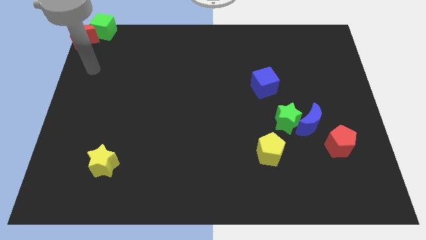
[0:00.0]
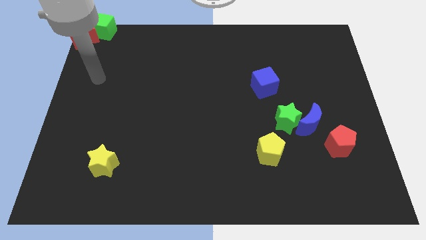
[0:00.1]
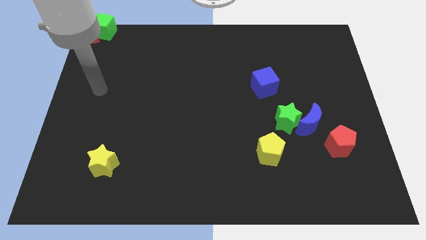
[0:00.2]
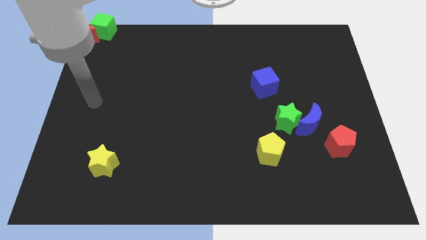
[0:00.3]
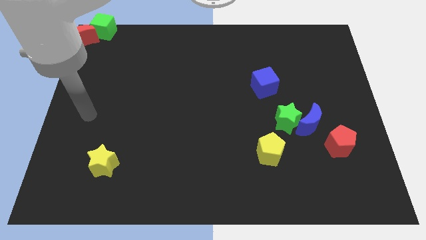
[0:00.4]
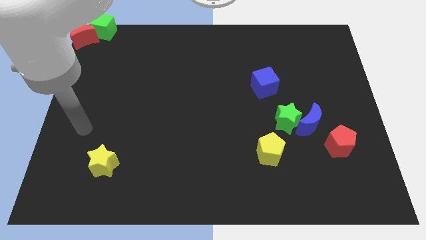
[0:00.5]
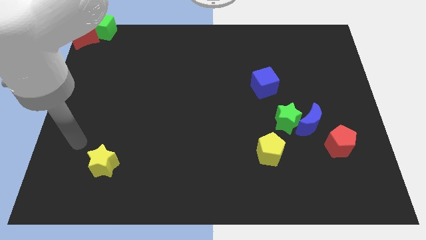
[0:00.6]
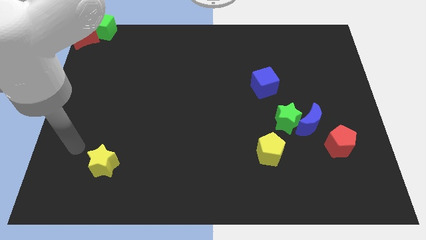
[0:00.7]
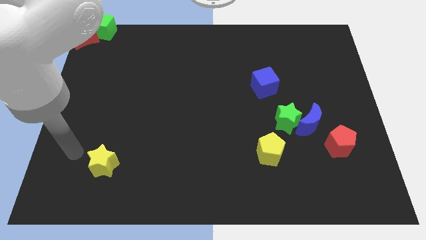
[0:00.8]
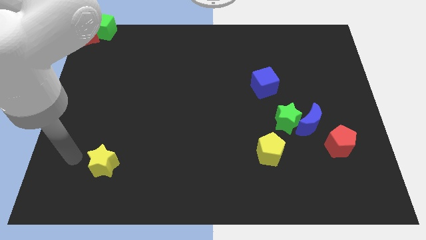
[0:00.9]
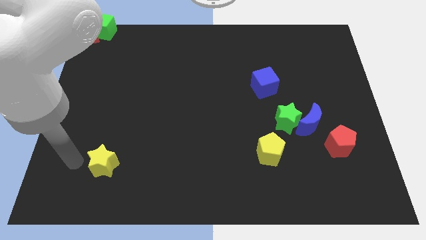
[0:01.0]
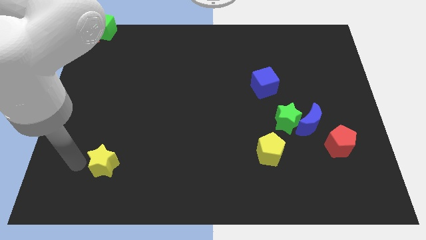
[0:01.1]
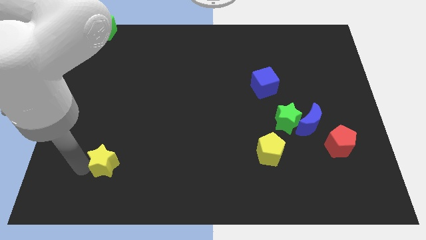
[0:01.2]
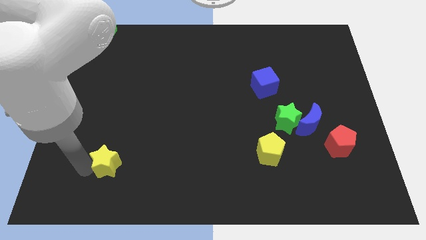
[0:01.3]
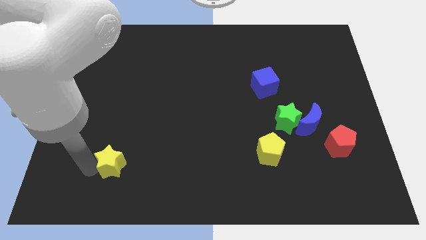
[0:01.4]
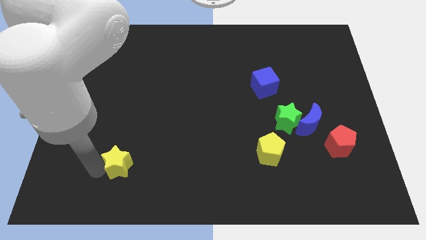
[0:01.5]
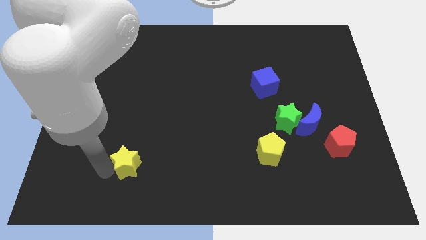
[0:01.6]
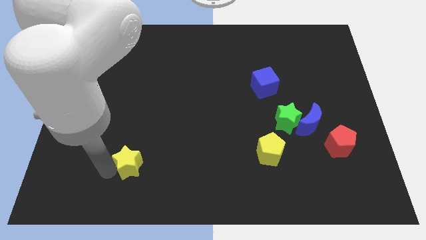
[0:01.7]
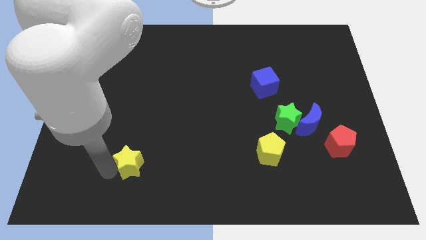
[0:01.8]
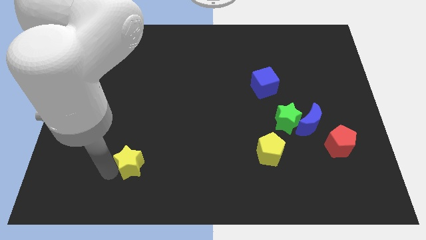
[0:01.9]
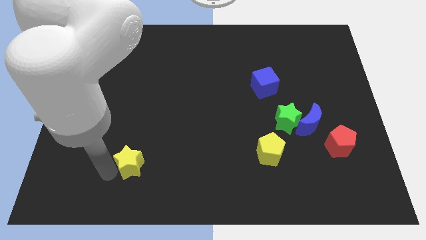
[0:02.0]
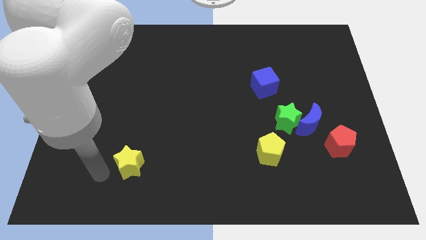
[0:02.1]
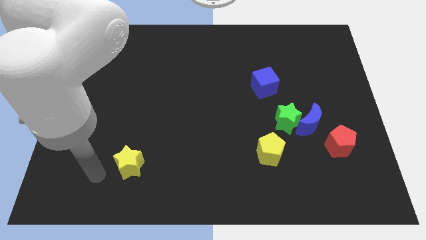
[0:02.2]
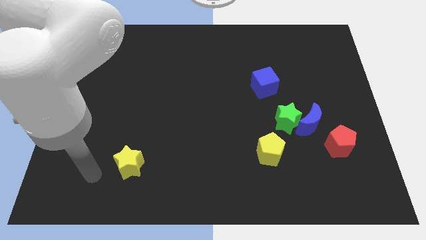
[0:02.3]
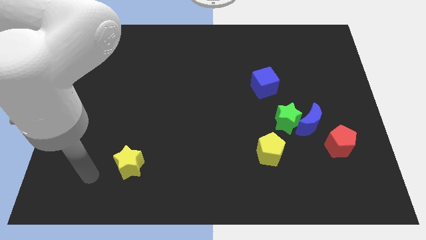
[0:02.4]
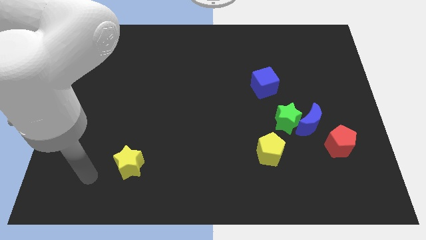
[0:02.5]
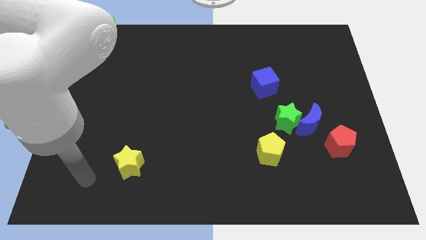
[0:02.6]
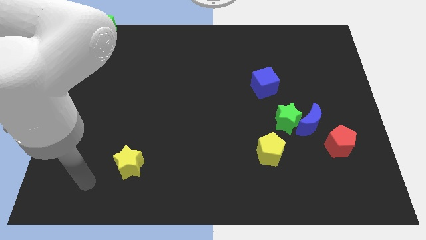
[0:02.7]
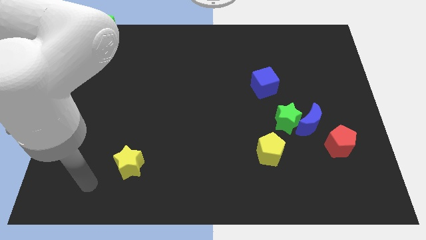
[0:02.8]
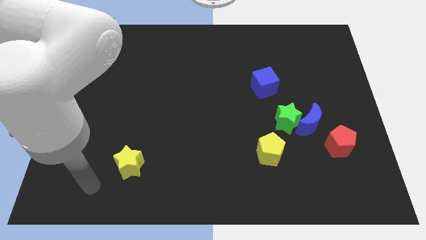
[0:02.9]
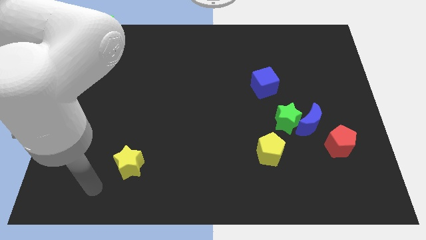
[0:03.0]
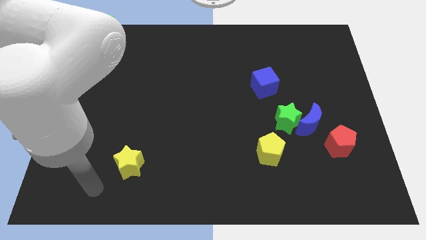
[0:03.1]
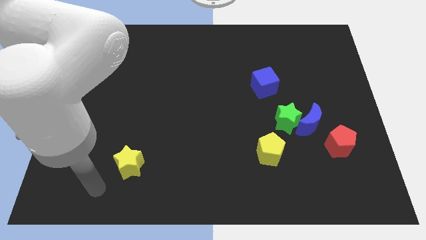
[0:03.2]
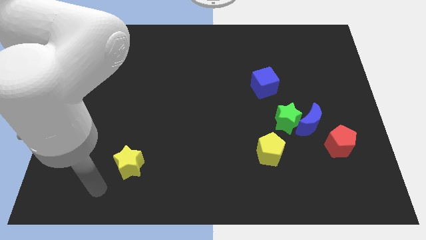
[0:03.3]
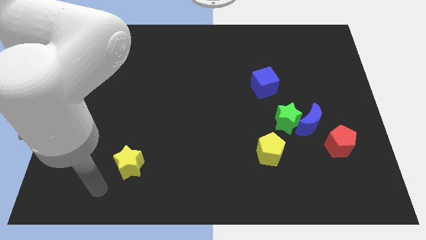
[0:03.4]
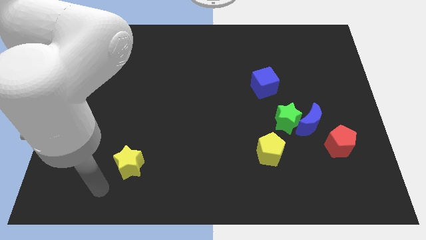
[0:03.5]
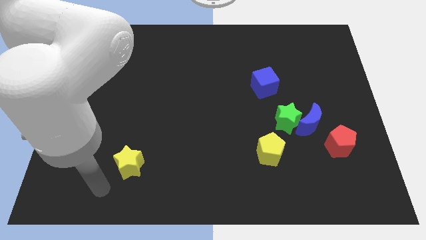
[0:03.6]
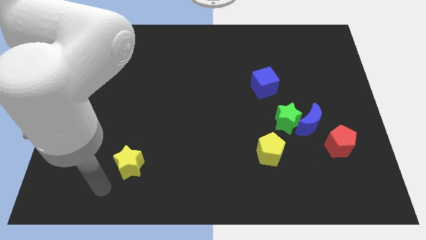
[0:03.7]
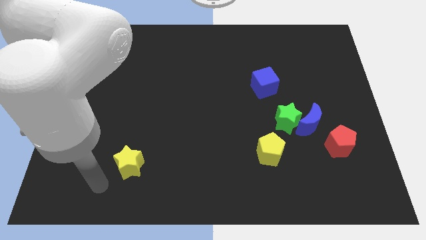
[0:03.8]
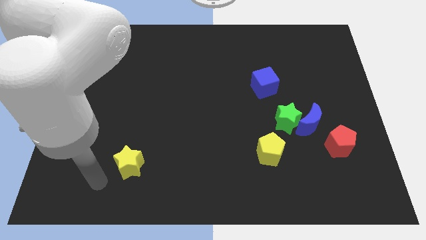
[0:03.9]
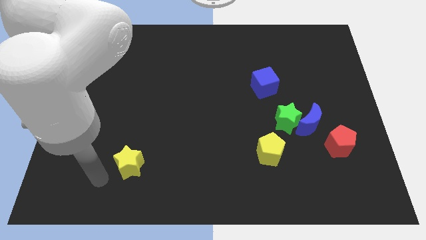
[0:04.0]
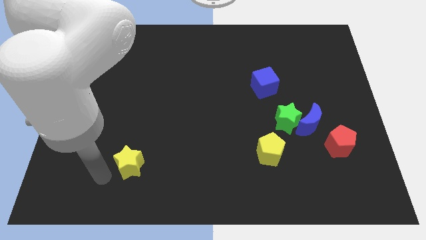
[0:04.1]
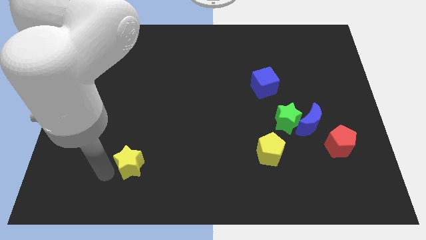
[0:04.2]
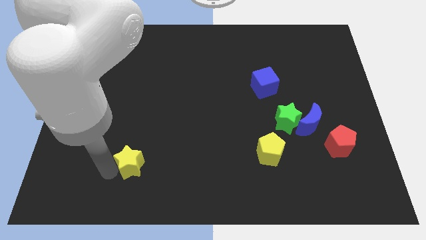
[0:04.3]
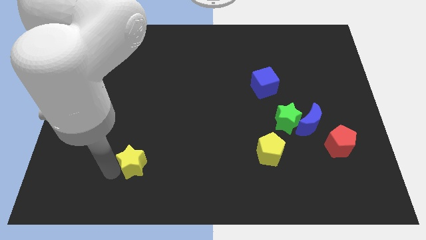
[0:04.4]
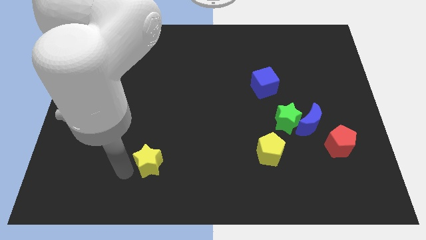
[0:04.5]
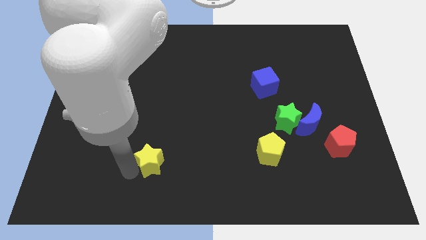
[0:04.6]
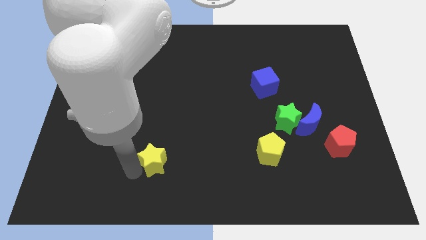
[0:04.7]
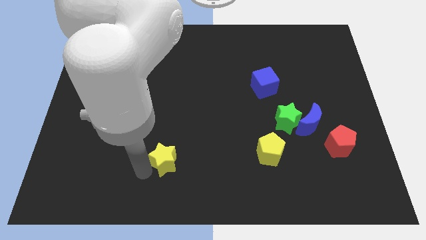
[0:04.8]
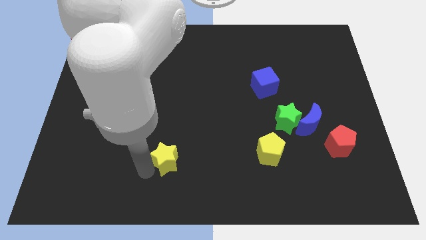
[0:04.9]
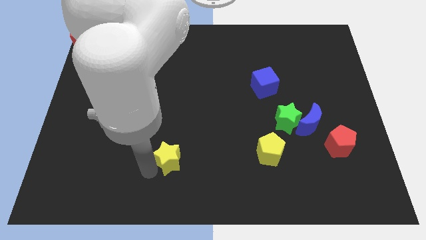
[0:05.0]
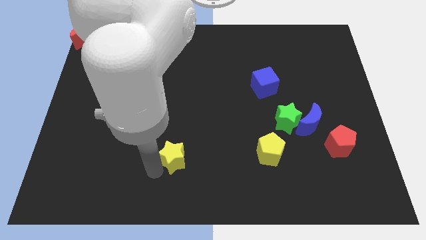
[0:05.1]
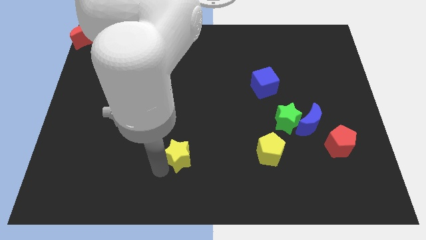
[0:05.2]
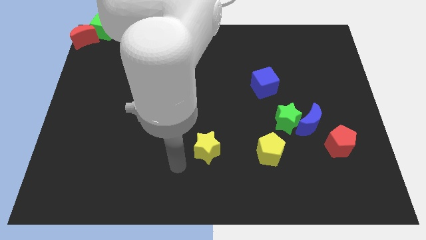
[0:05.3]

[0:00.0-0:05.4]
push the yellow star to the center of the board

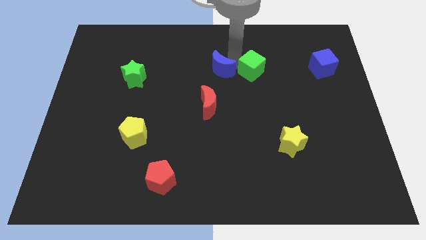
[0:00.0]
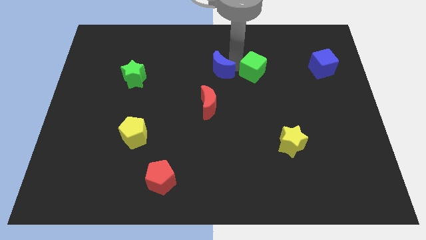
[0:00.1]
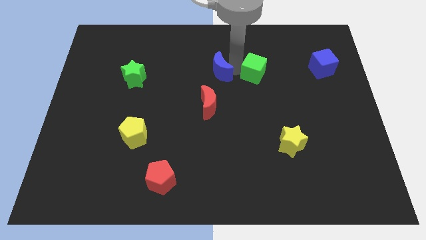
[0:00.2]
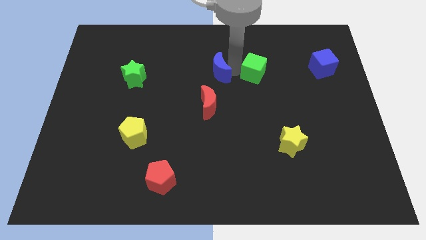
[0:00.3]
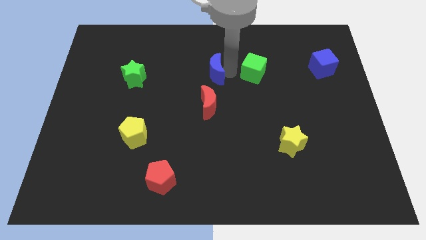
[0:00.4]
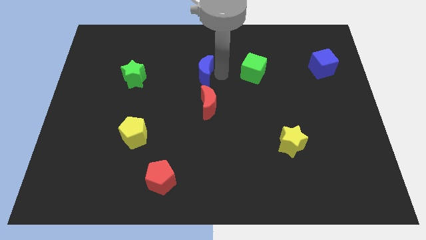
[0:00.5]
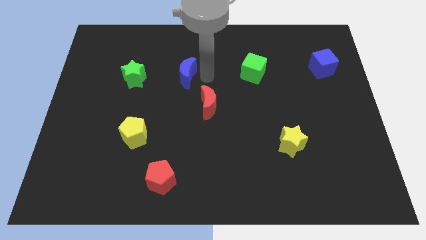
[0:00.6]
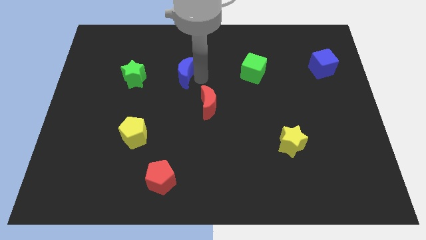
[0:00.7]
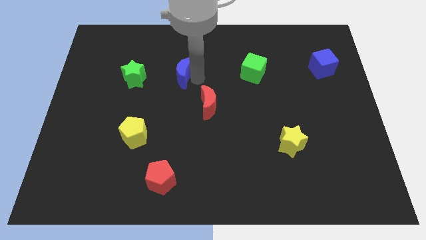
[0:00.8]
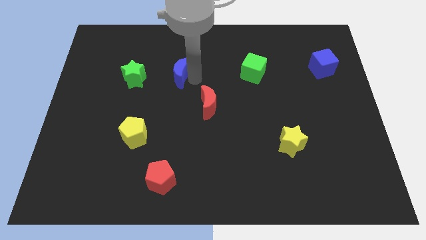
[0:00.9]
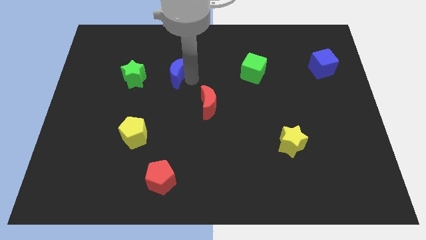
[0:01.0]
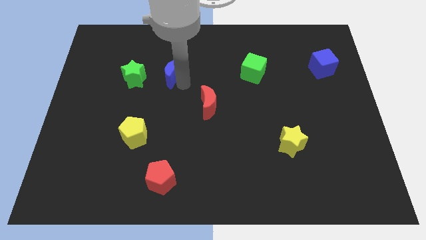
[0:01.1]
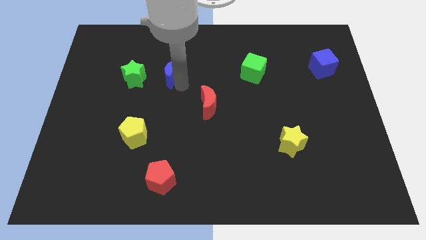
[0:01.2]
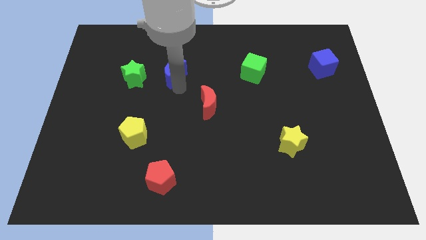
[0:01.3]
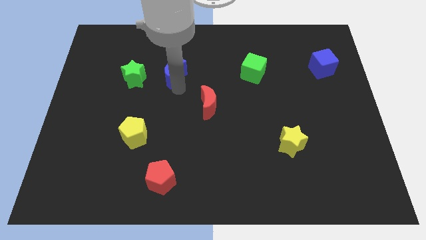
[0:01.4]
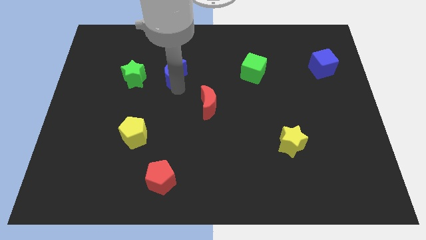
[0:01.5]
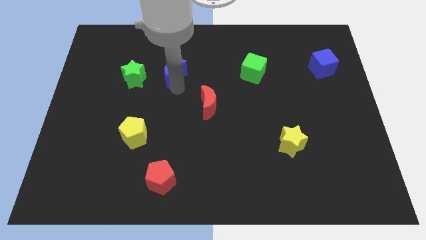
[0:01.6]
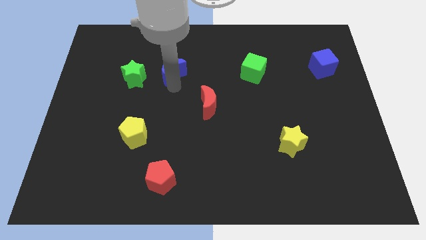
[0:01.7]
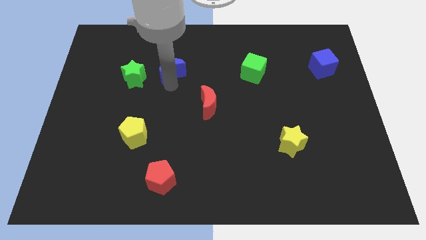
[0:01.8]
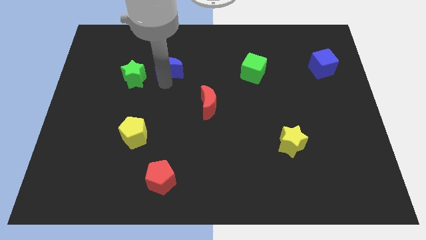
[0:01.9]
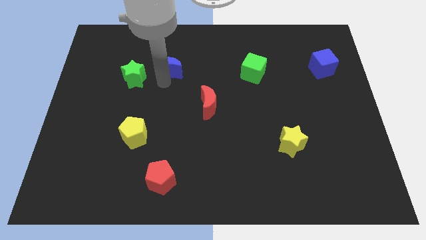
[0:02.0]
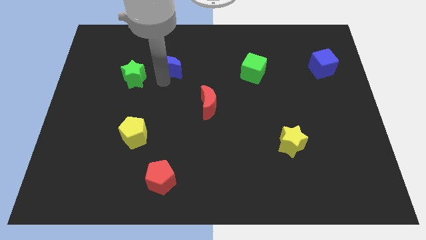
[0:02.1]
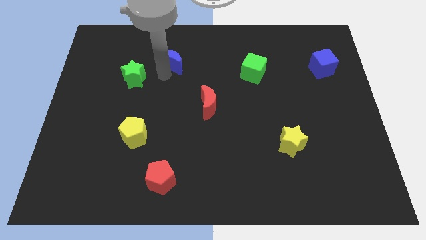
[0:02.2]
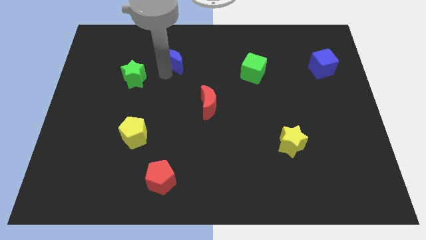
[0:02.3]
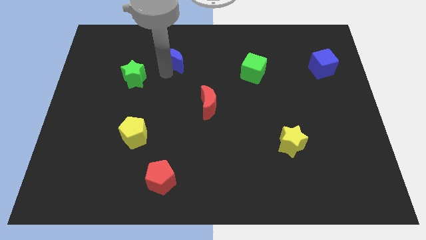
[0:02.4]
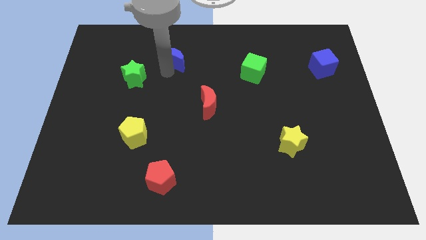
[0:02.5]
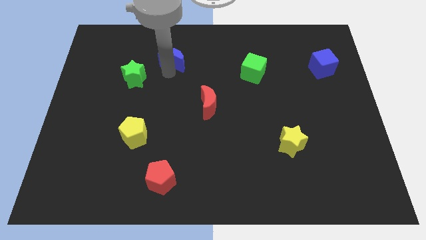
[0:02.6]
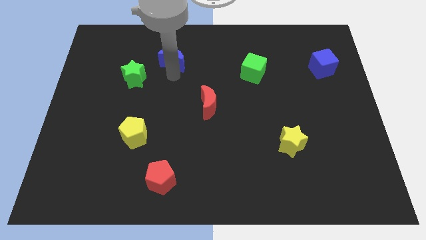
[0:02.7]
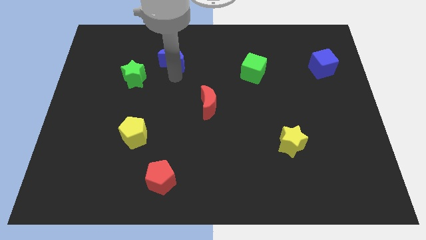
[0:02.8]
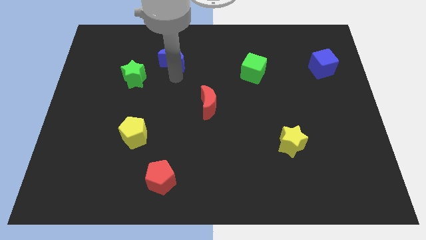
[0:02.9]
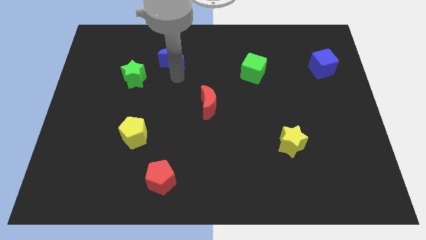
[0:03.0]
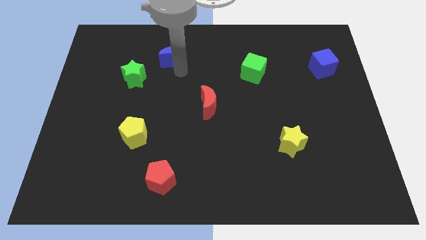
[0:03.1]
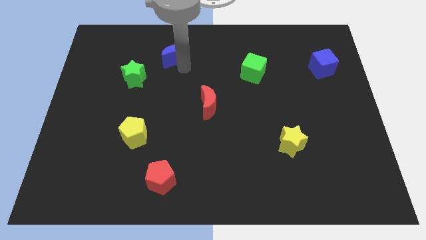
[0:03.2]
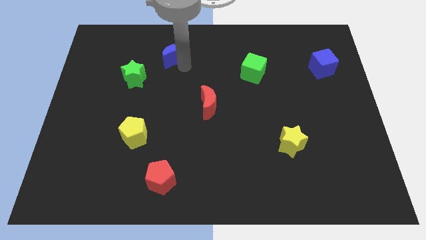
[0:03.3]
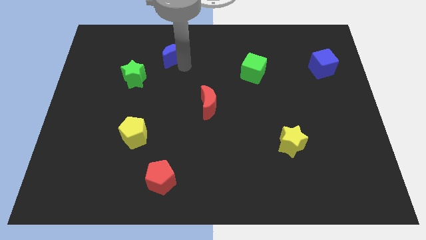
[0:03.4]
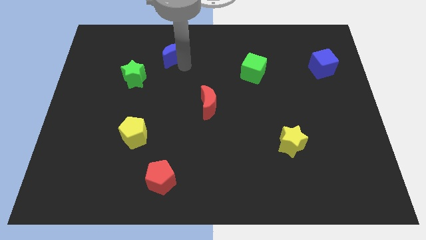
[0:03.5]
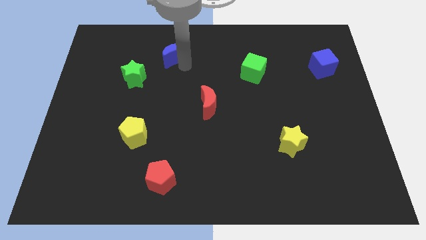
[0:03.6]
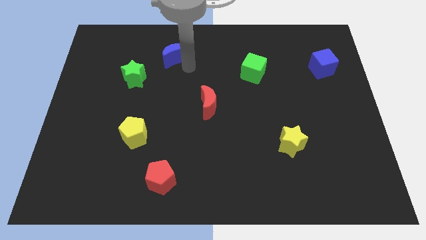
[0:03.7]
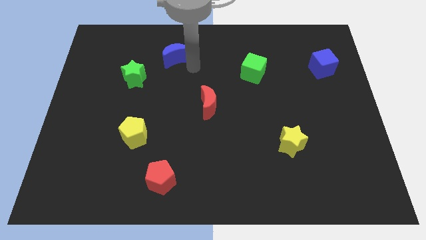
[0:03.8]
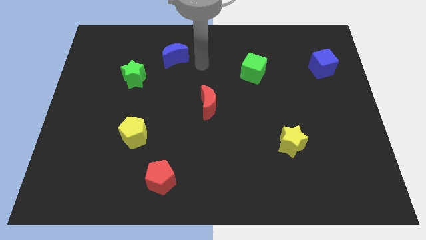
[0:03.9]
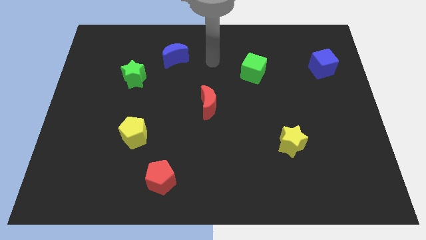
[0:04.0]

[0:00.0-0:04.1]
separate the blue crescent from the green cube
